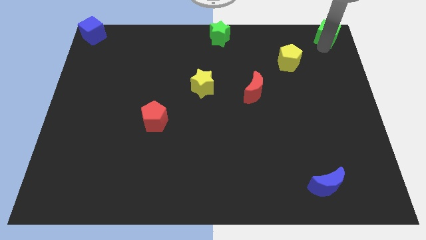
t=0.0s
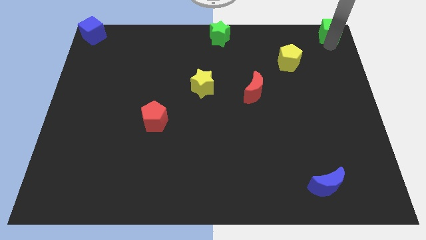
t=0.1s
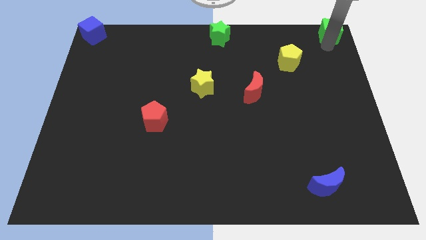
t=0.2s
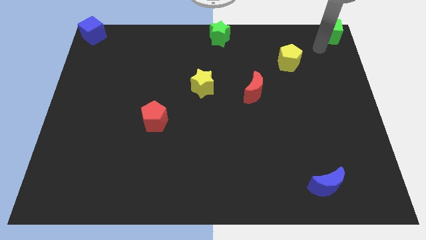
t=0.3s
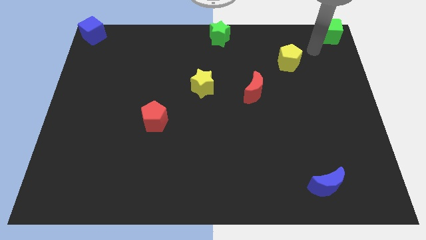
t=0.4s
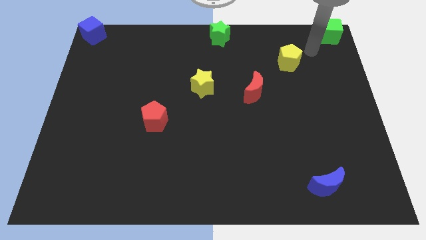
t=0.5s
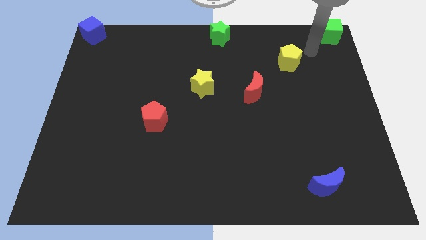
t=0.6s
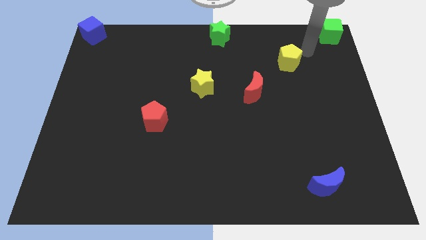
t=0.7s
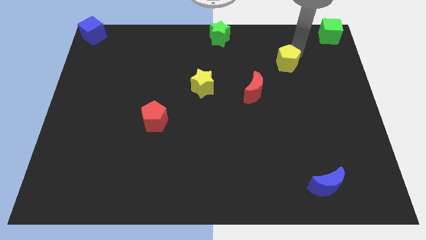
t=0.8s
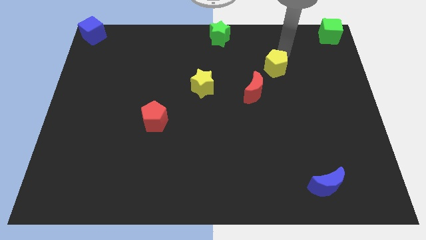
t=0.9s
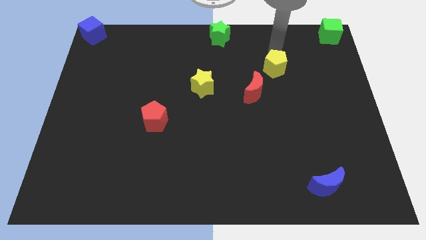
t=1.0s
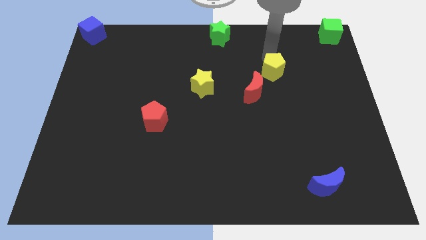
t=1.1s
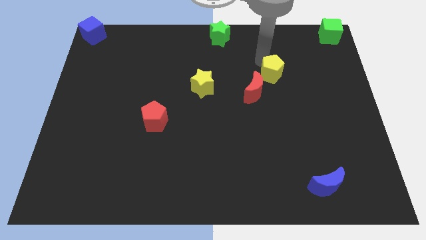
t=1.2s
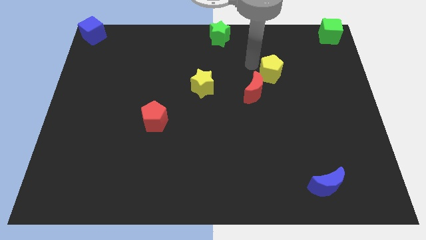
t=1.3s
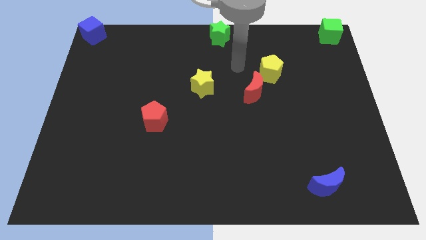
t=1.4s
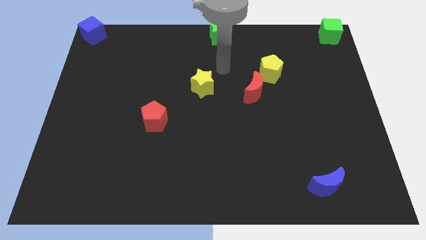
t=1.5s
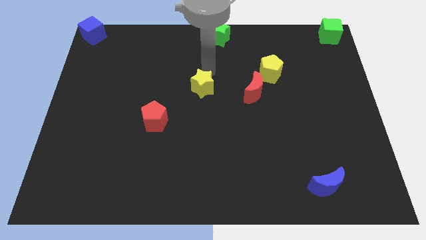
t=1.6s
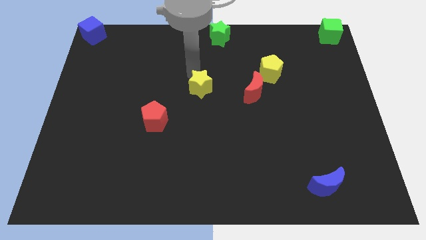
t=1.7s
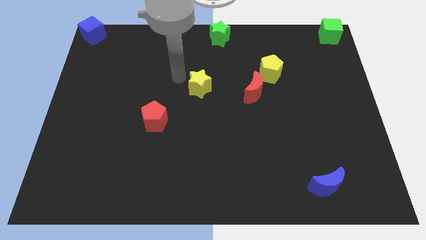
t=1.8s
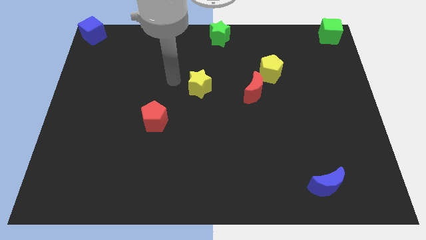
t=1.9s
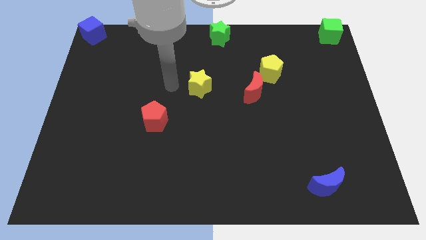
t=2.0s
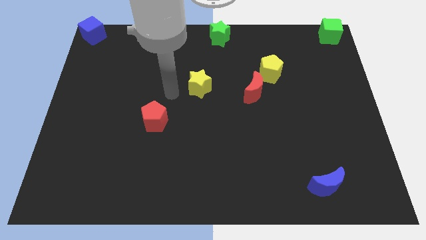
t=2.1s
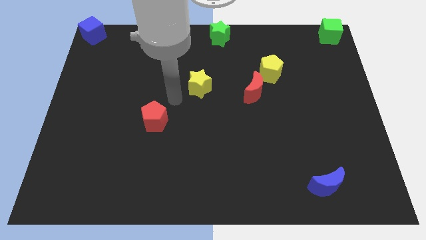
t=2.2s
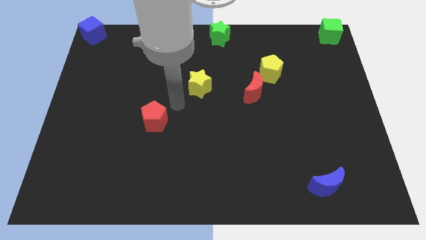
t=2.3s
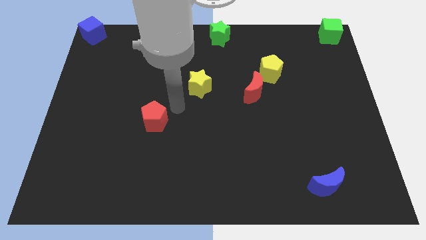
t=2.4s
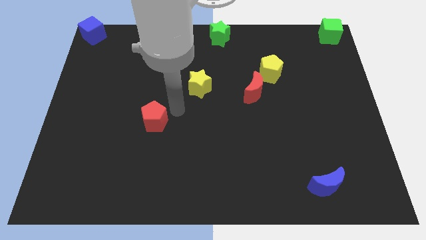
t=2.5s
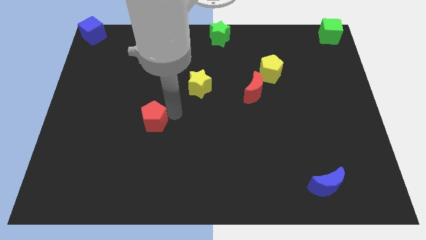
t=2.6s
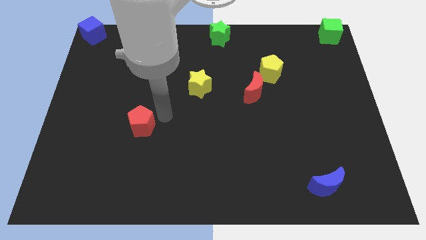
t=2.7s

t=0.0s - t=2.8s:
push the yellow pentagon slightly towards the red crescent

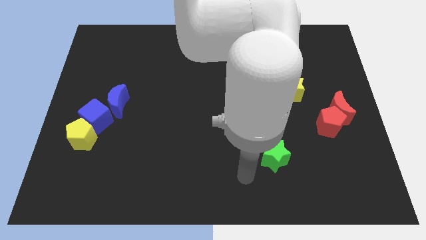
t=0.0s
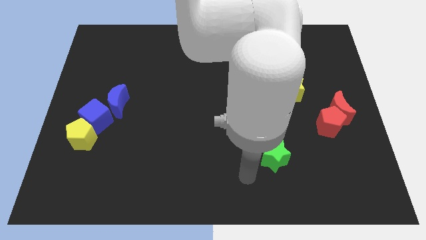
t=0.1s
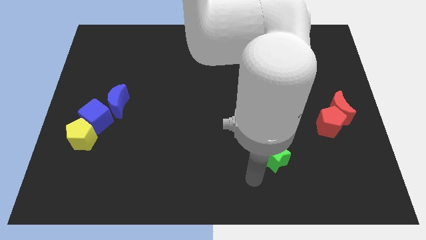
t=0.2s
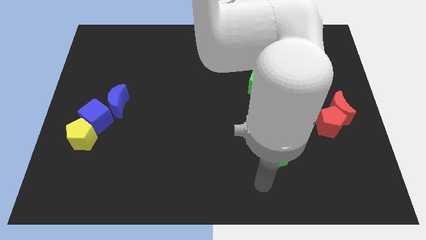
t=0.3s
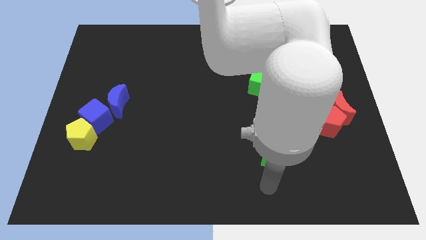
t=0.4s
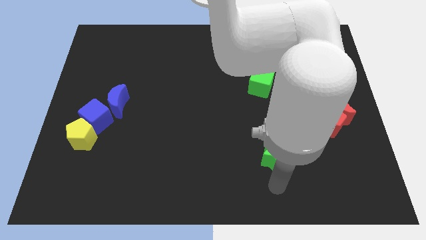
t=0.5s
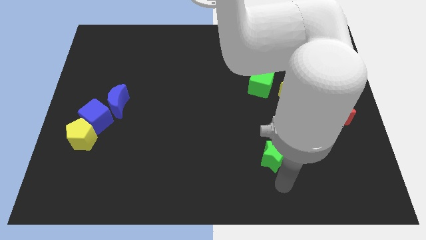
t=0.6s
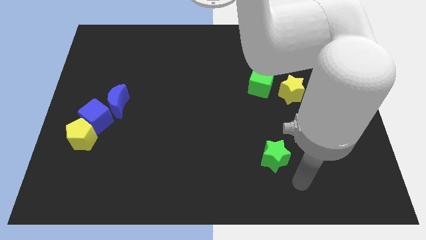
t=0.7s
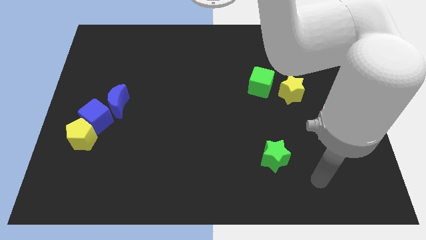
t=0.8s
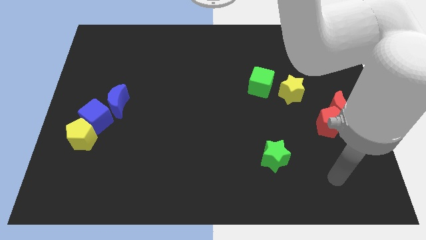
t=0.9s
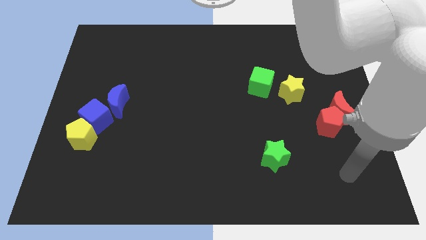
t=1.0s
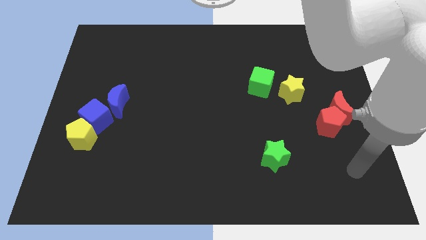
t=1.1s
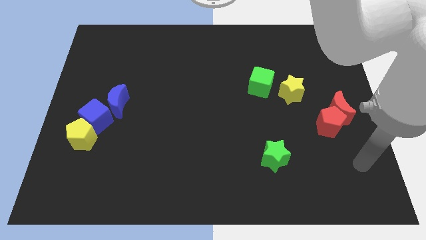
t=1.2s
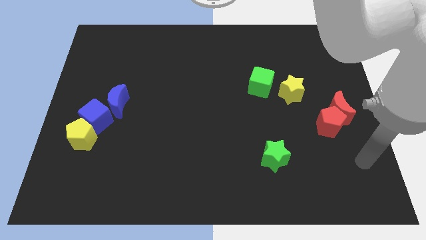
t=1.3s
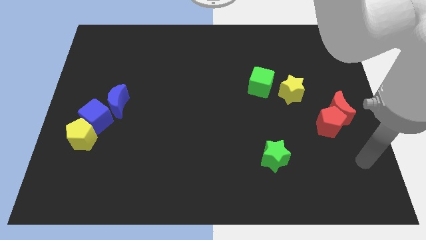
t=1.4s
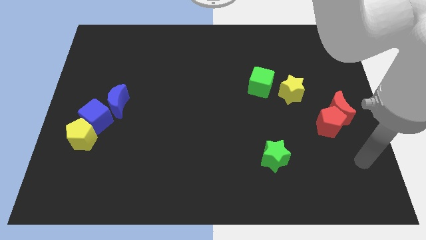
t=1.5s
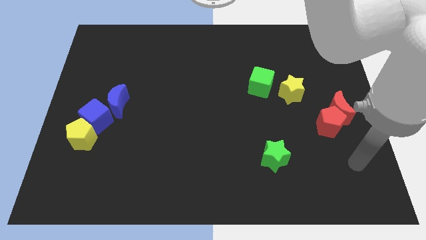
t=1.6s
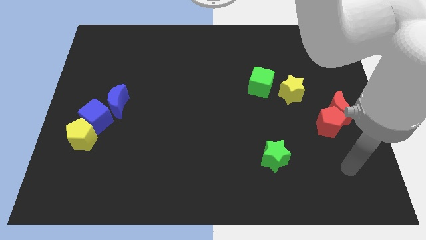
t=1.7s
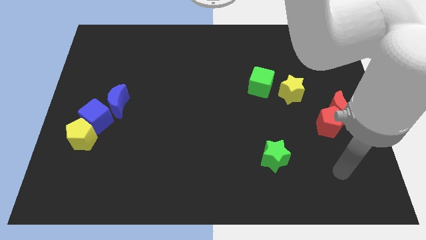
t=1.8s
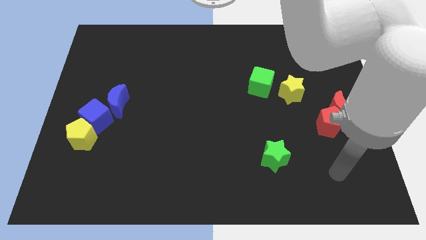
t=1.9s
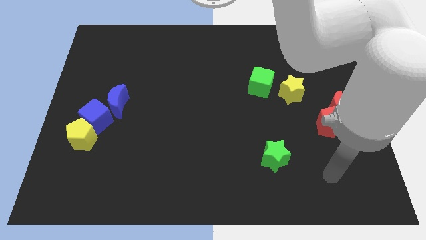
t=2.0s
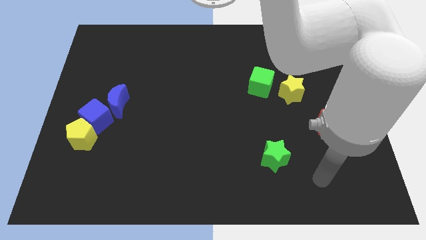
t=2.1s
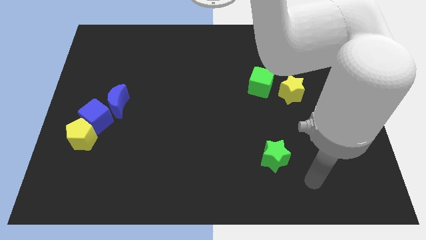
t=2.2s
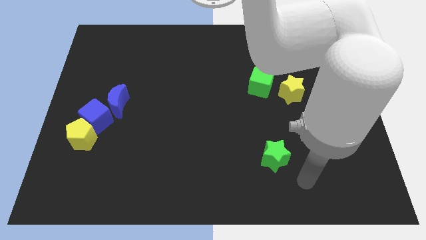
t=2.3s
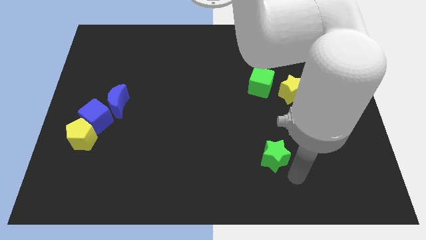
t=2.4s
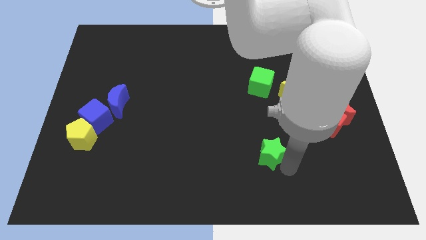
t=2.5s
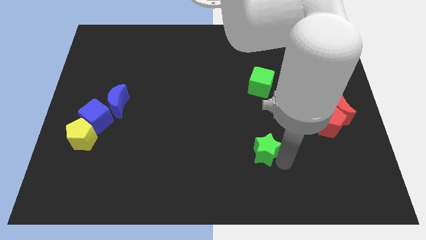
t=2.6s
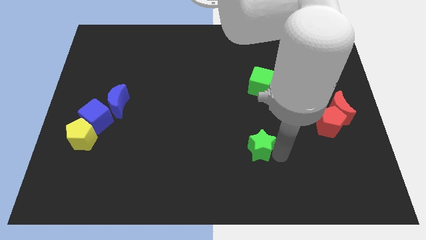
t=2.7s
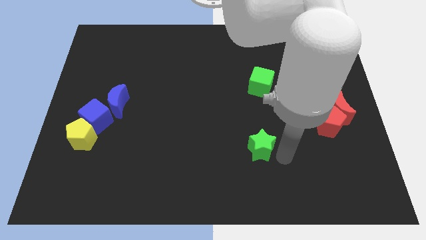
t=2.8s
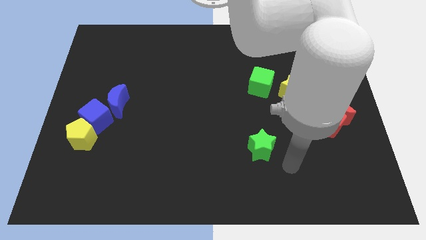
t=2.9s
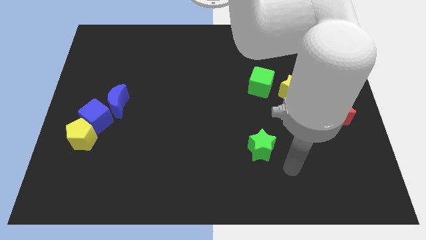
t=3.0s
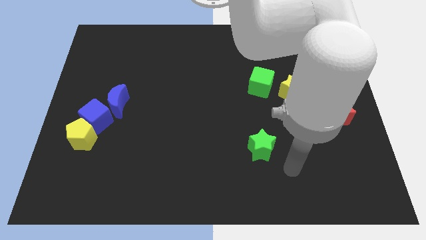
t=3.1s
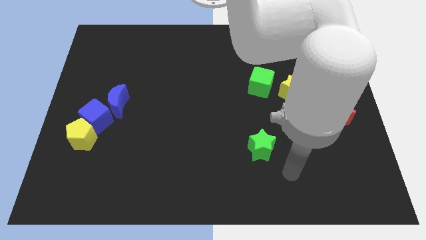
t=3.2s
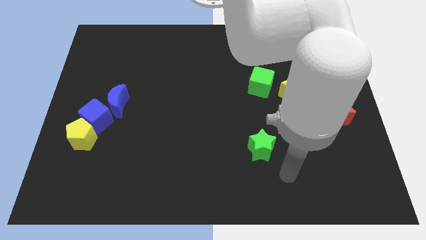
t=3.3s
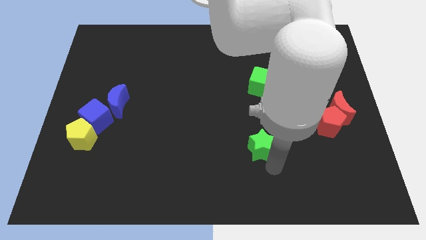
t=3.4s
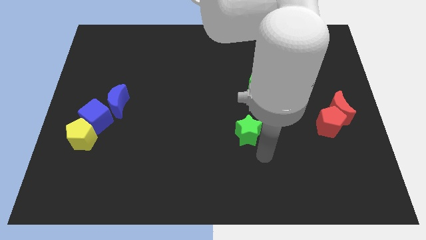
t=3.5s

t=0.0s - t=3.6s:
push the green star towards the center of the board

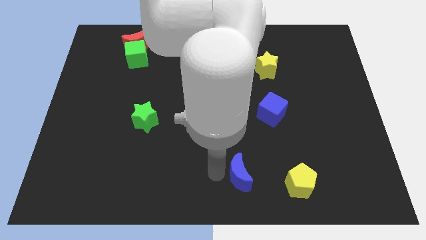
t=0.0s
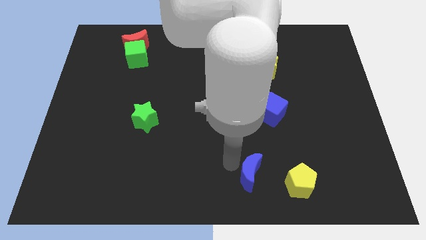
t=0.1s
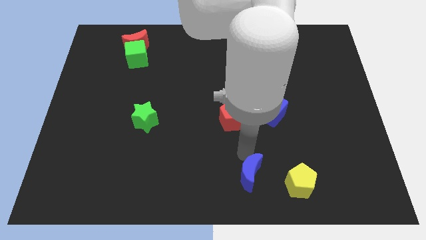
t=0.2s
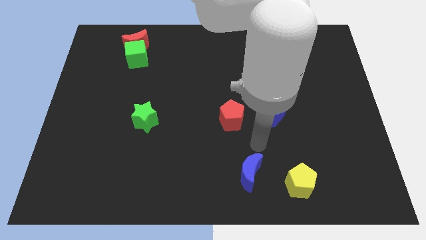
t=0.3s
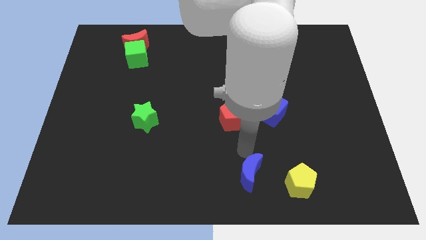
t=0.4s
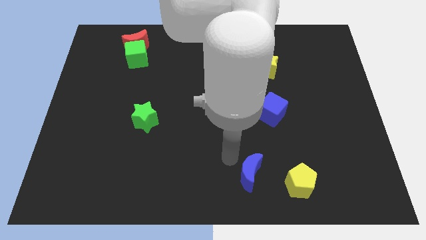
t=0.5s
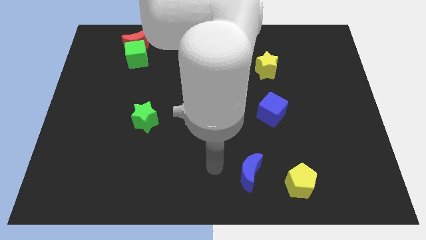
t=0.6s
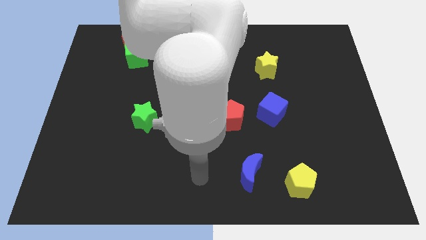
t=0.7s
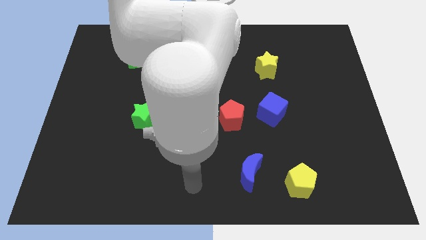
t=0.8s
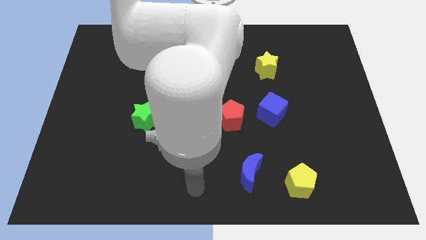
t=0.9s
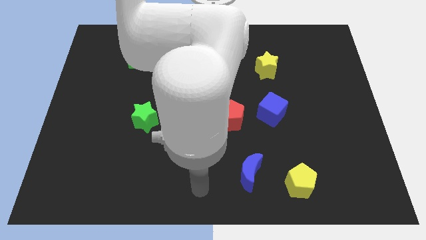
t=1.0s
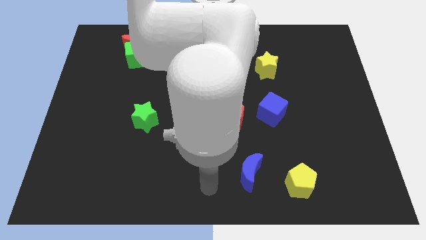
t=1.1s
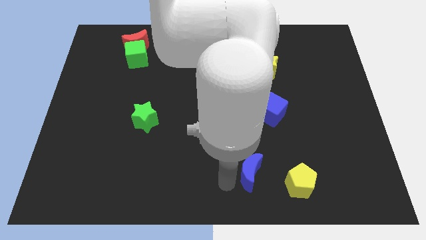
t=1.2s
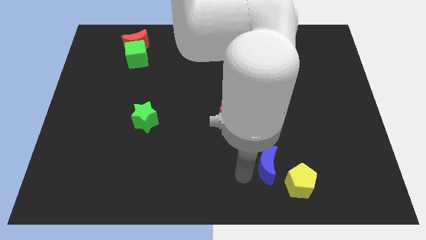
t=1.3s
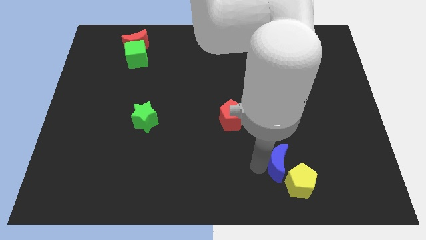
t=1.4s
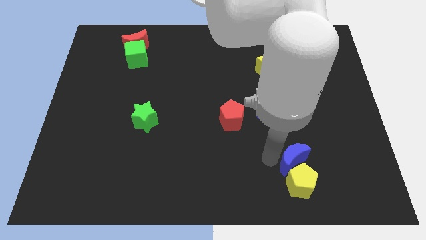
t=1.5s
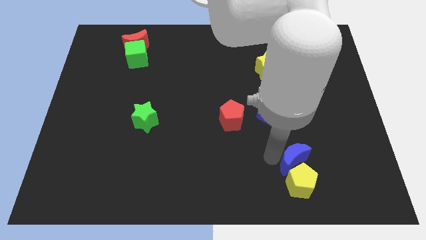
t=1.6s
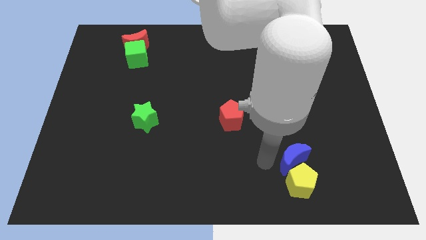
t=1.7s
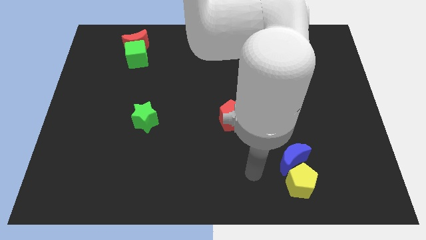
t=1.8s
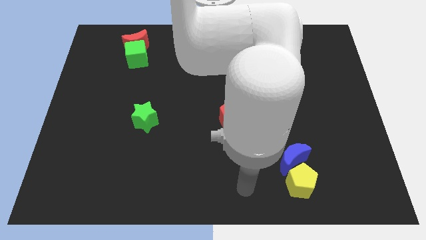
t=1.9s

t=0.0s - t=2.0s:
put the blue moon above the yellow pentagon

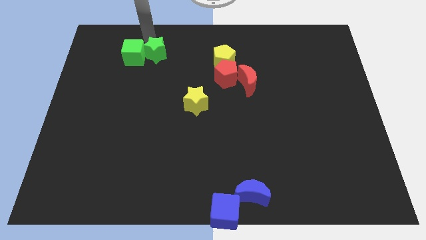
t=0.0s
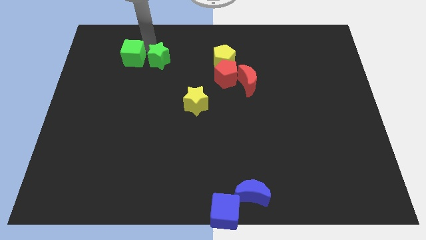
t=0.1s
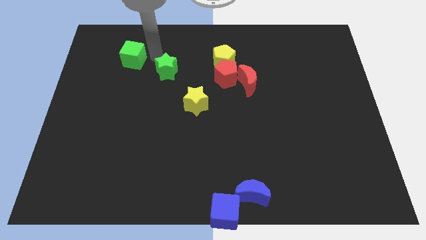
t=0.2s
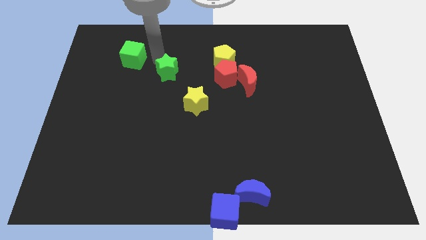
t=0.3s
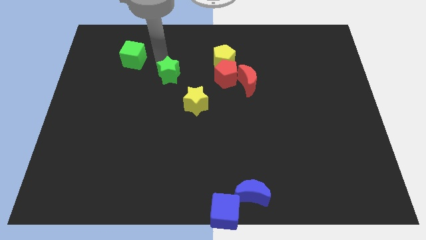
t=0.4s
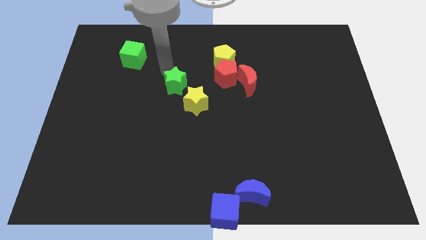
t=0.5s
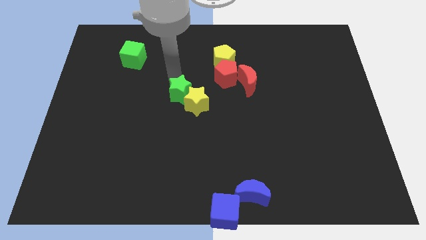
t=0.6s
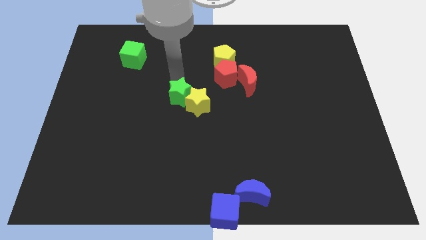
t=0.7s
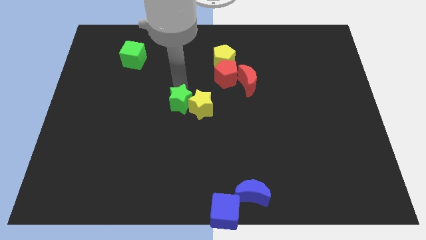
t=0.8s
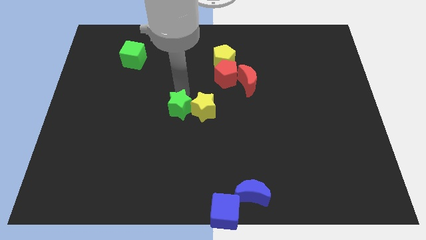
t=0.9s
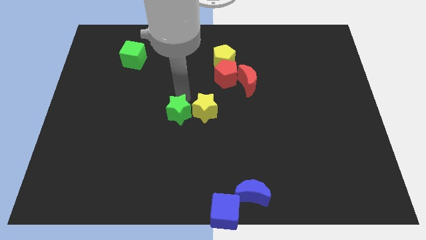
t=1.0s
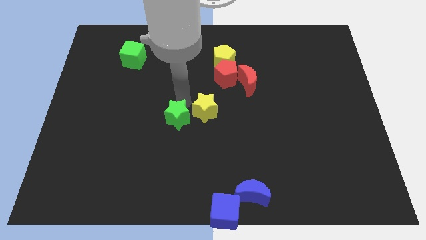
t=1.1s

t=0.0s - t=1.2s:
push green star beside yellow star
